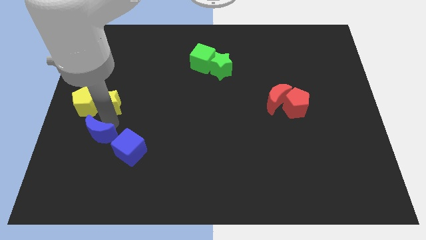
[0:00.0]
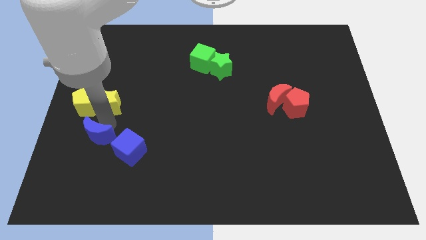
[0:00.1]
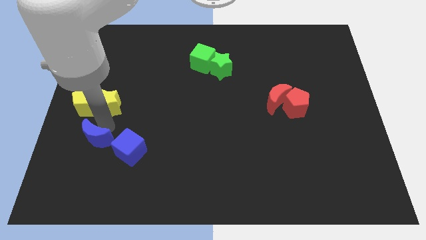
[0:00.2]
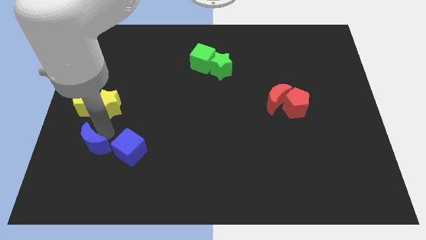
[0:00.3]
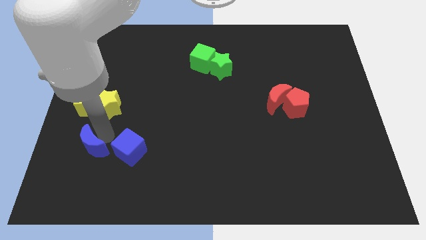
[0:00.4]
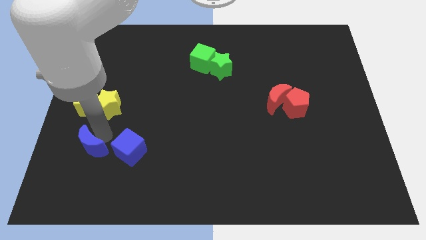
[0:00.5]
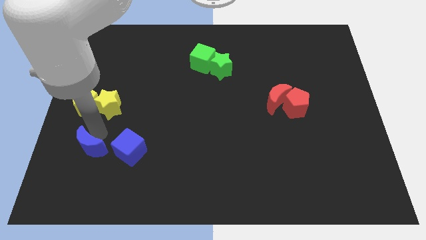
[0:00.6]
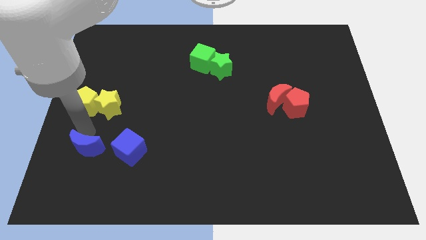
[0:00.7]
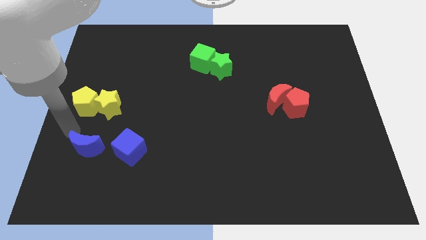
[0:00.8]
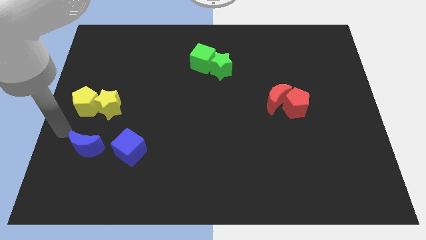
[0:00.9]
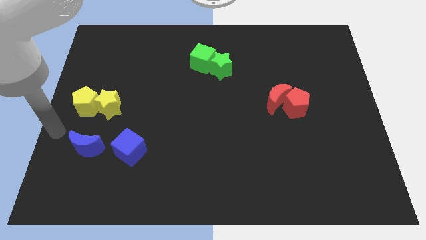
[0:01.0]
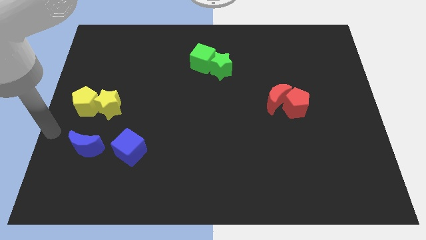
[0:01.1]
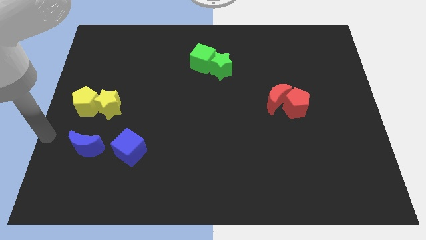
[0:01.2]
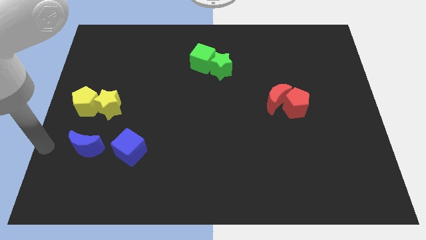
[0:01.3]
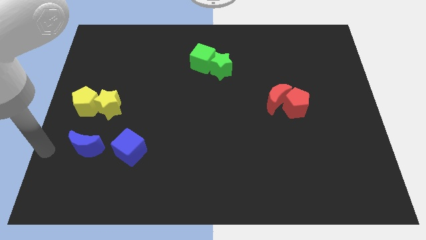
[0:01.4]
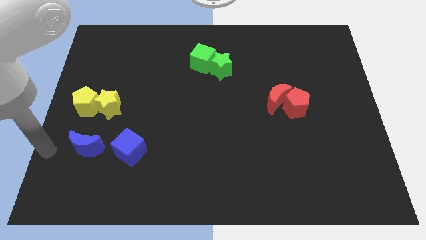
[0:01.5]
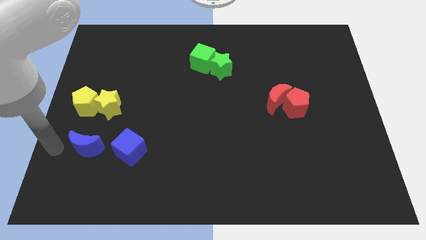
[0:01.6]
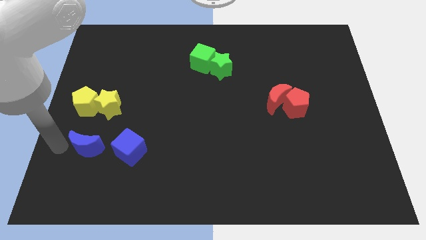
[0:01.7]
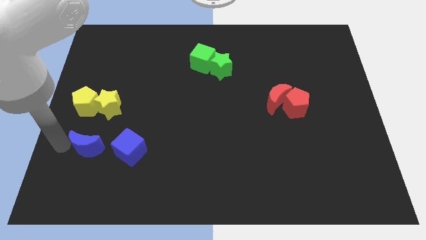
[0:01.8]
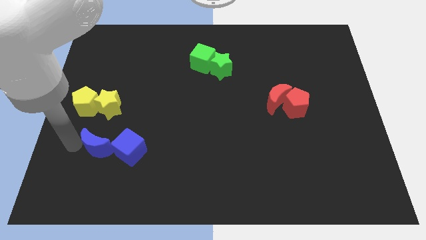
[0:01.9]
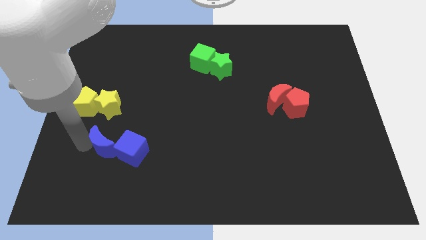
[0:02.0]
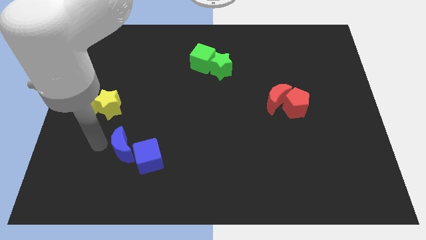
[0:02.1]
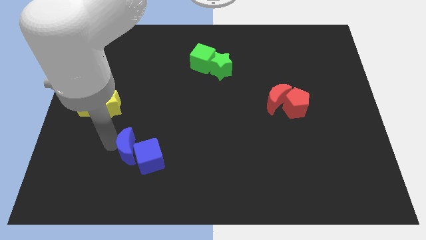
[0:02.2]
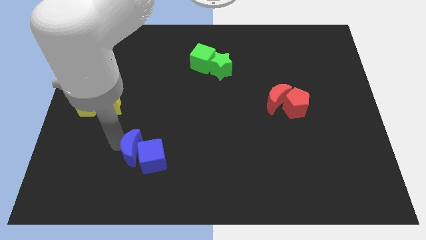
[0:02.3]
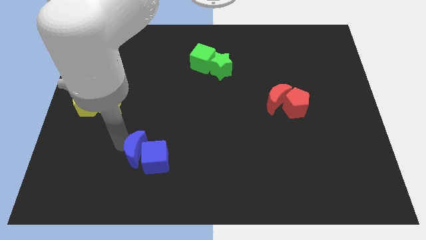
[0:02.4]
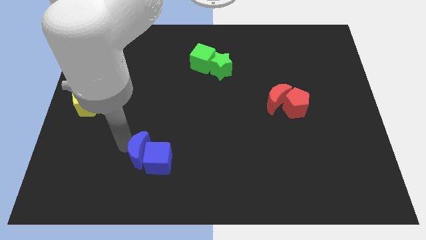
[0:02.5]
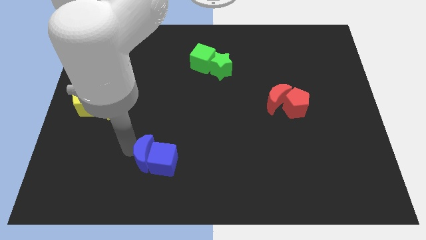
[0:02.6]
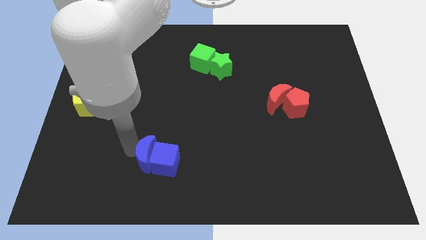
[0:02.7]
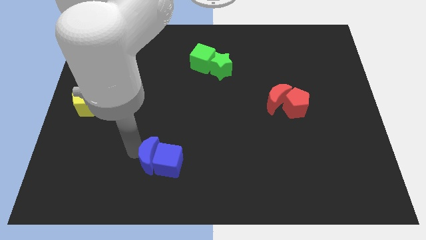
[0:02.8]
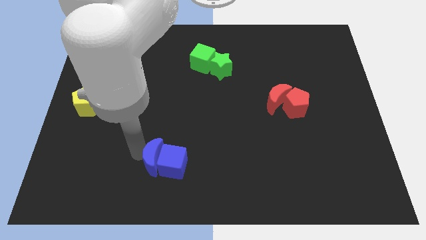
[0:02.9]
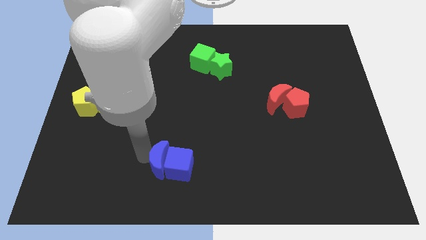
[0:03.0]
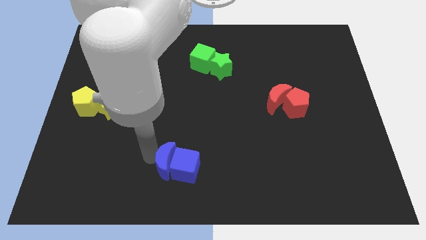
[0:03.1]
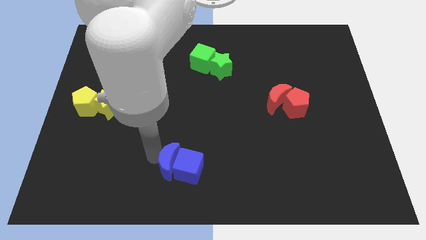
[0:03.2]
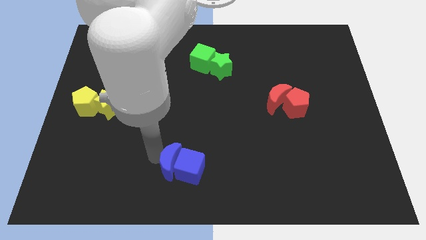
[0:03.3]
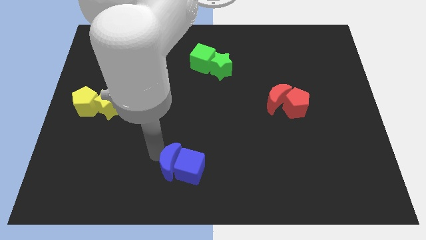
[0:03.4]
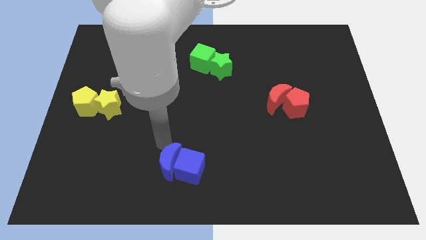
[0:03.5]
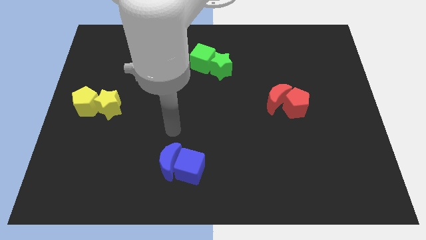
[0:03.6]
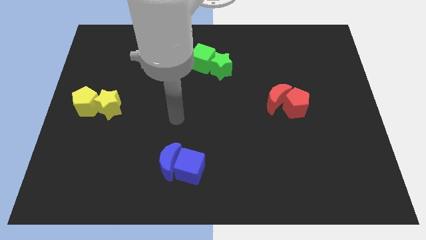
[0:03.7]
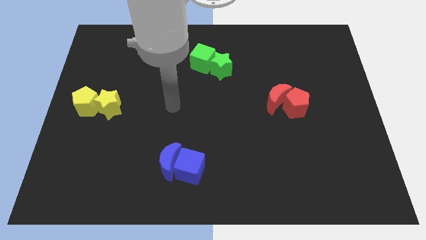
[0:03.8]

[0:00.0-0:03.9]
push the blue blocks towards the right side of the board

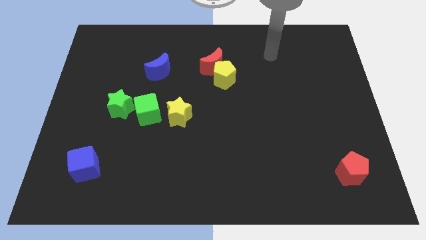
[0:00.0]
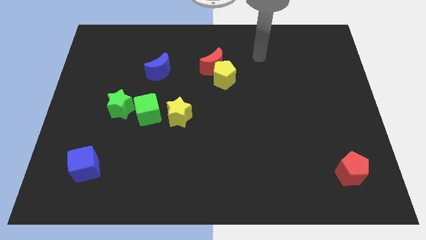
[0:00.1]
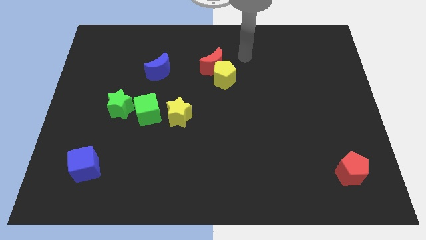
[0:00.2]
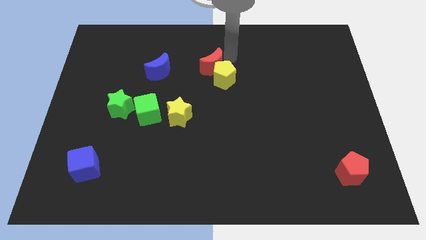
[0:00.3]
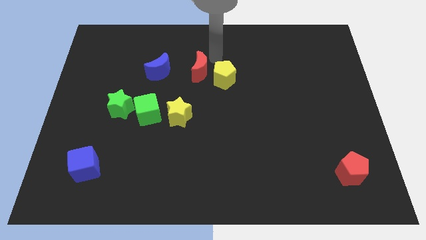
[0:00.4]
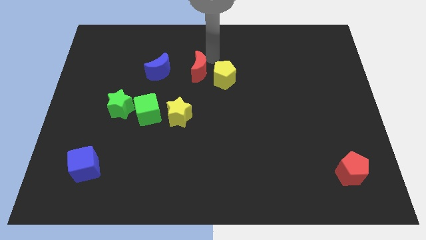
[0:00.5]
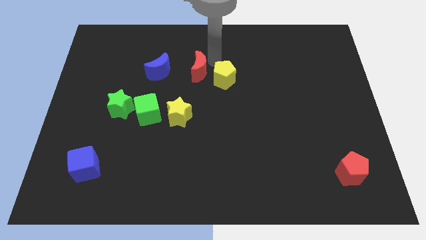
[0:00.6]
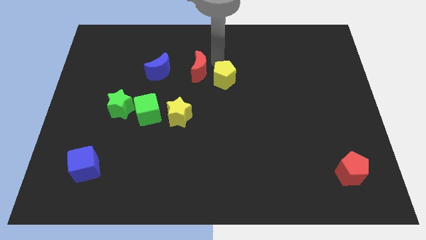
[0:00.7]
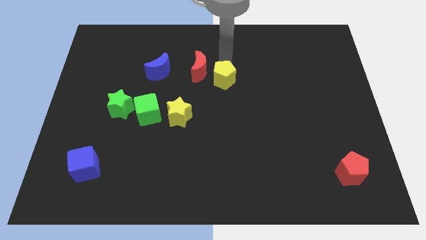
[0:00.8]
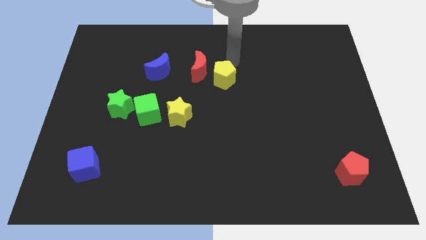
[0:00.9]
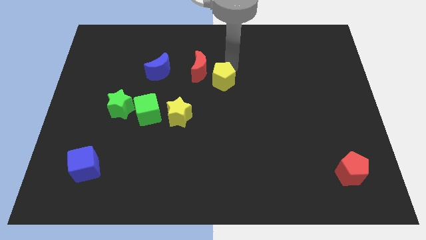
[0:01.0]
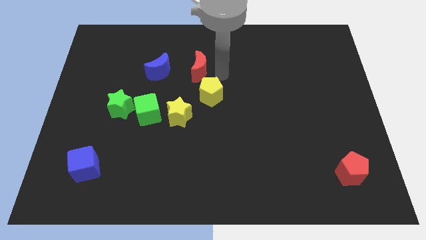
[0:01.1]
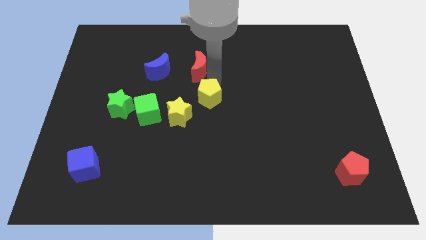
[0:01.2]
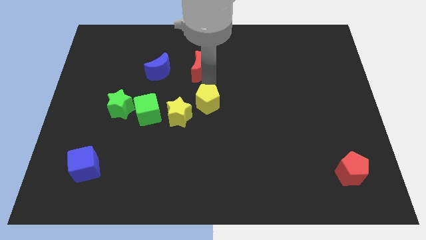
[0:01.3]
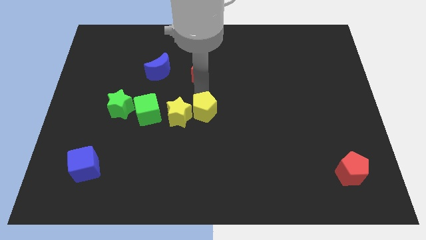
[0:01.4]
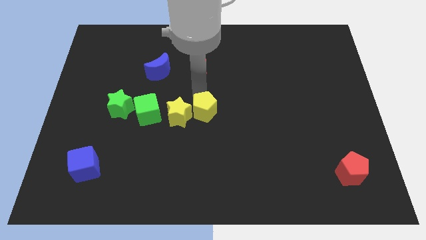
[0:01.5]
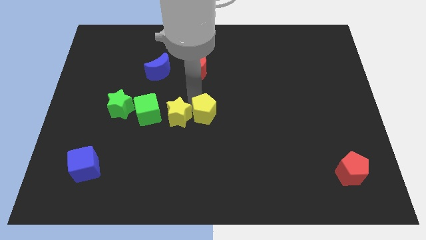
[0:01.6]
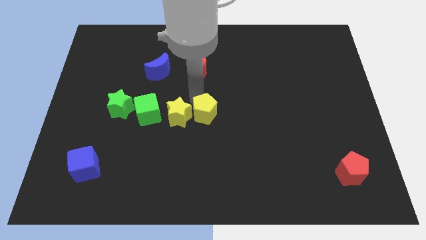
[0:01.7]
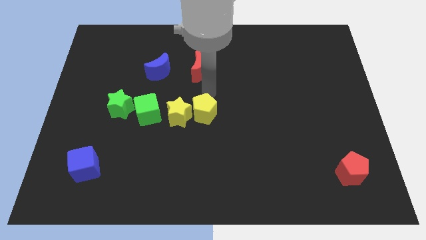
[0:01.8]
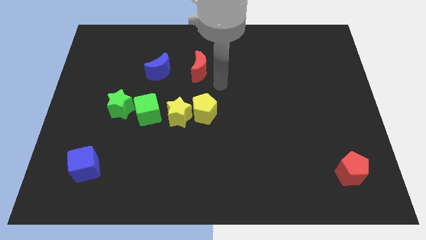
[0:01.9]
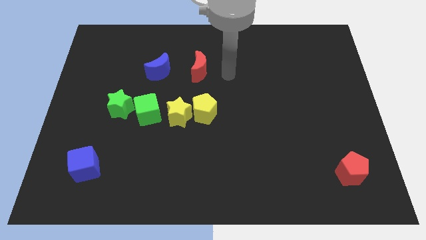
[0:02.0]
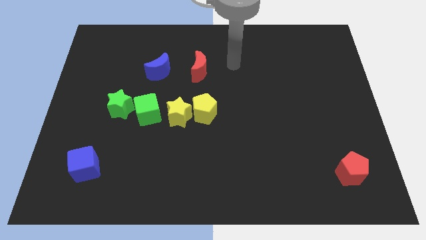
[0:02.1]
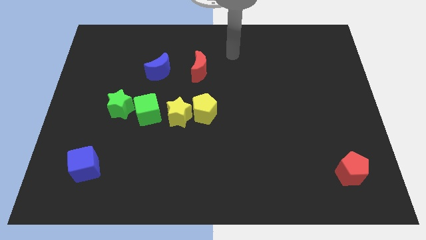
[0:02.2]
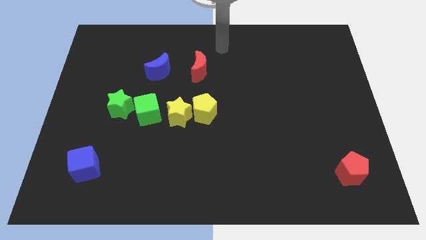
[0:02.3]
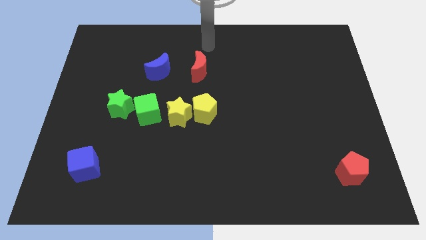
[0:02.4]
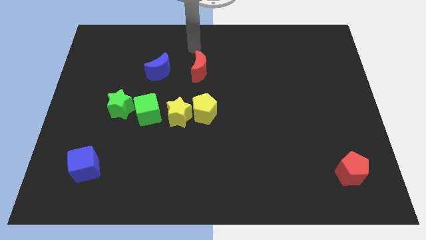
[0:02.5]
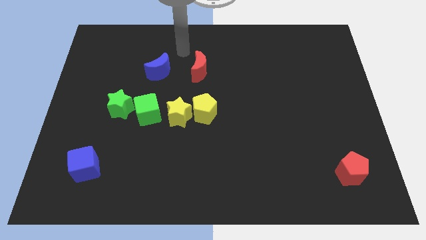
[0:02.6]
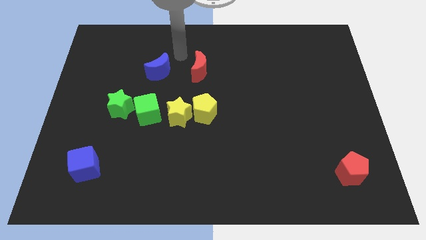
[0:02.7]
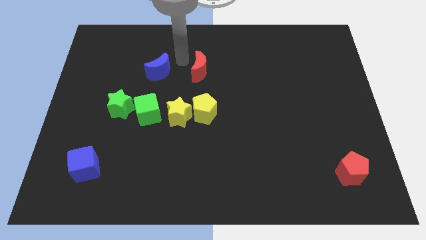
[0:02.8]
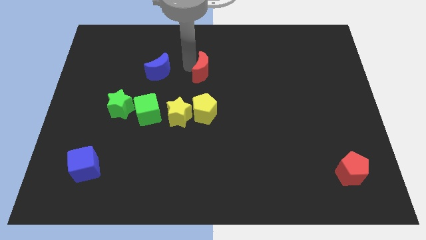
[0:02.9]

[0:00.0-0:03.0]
separate the red crescent and yellow pentagon

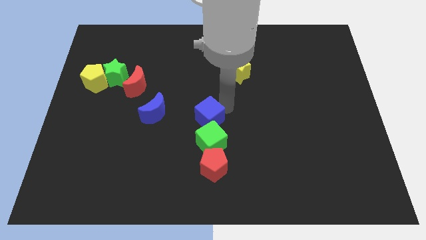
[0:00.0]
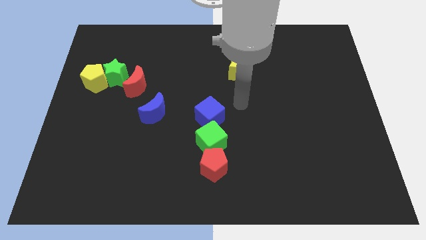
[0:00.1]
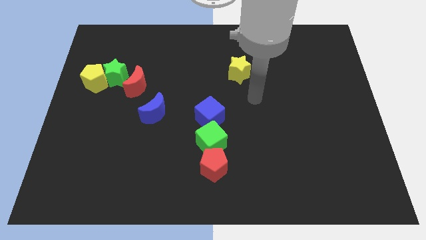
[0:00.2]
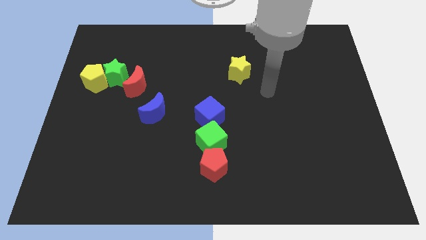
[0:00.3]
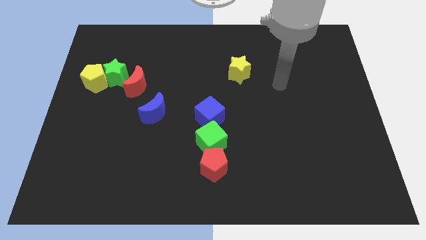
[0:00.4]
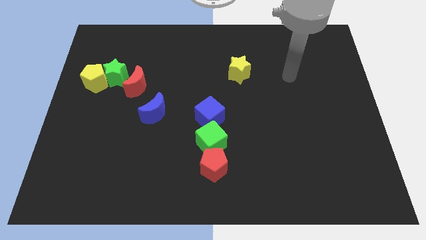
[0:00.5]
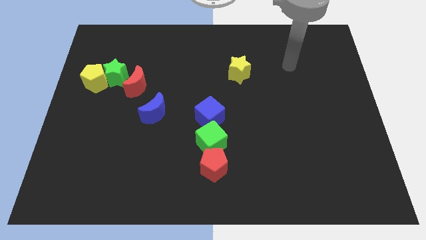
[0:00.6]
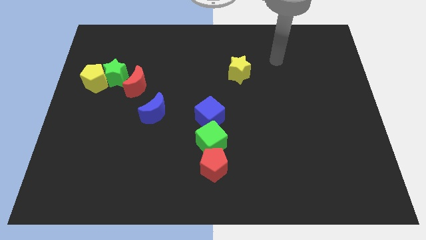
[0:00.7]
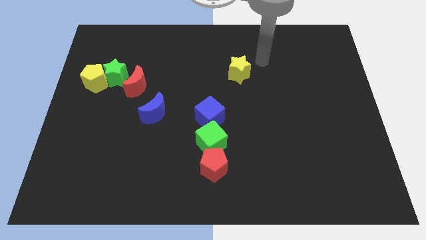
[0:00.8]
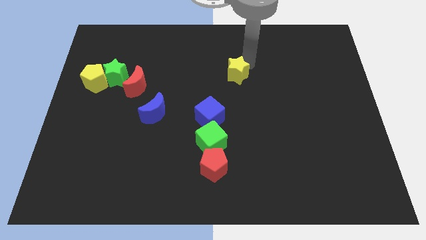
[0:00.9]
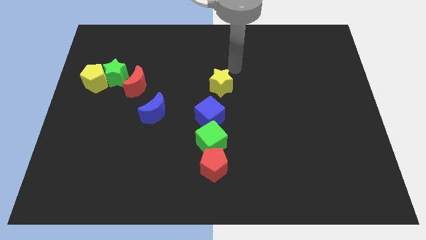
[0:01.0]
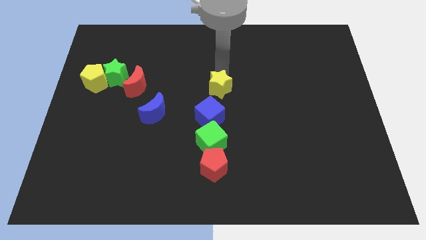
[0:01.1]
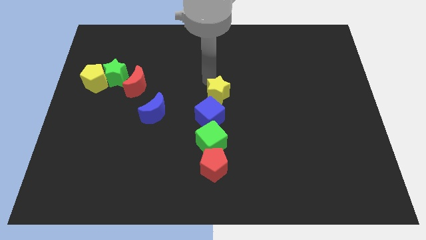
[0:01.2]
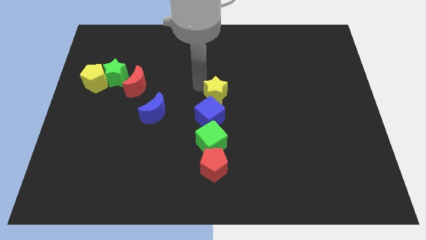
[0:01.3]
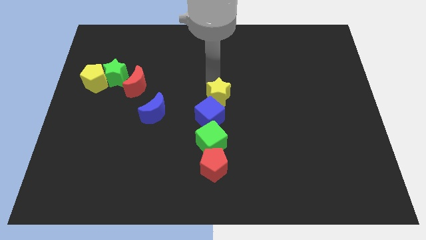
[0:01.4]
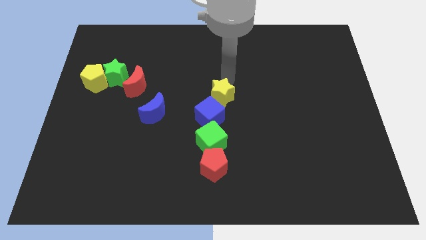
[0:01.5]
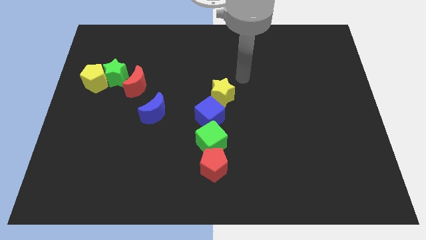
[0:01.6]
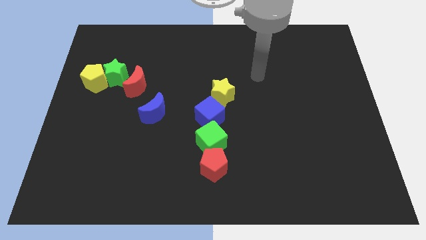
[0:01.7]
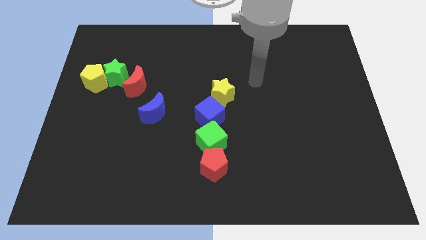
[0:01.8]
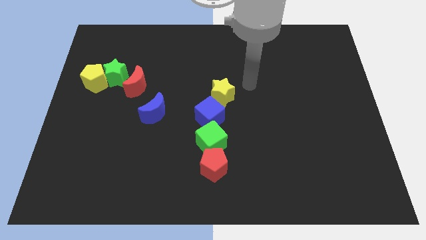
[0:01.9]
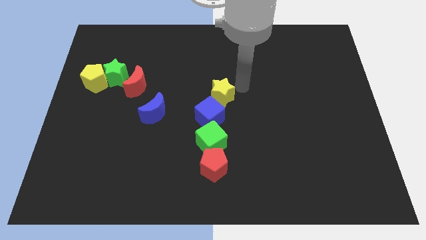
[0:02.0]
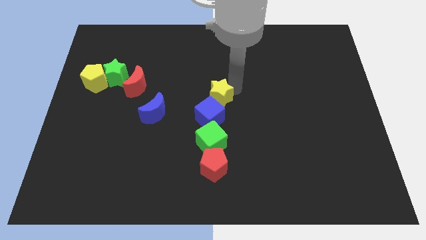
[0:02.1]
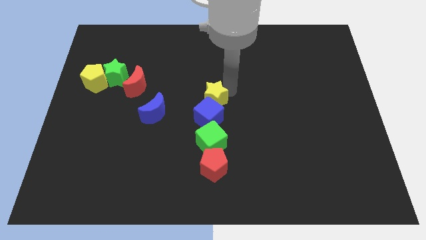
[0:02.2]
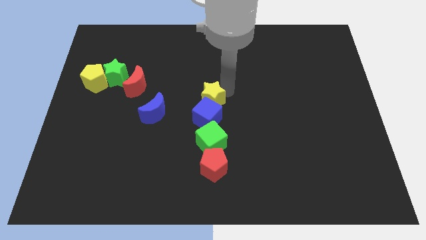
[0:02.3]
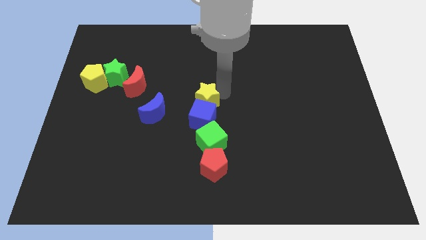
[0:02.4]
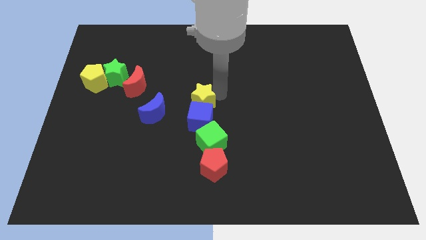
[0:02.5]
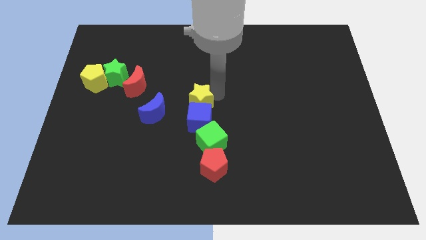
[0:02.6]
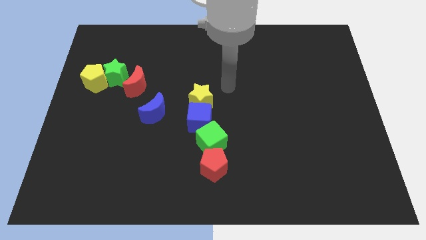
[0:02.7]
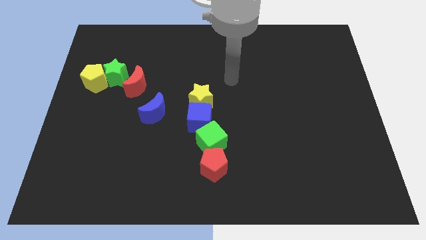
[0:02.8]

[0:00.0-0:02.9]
place the yellow star at the top of blue cube
